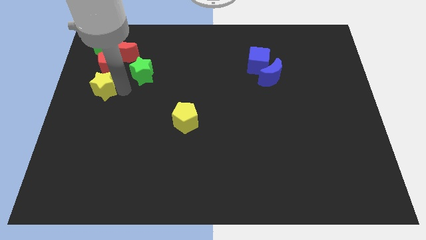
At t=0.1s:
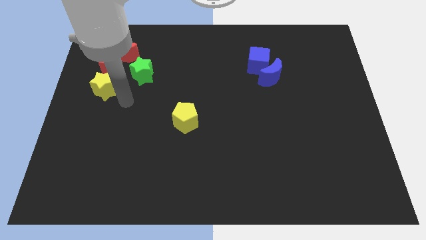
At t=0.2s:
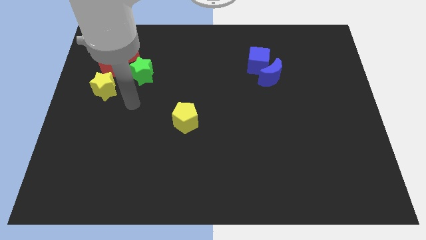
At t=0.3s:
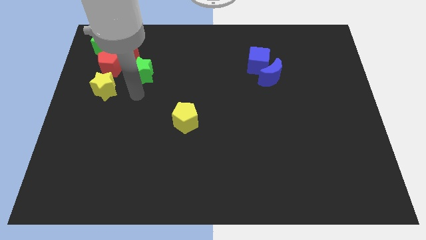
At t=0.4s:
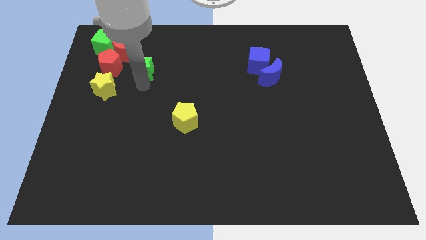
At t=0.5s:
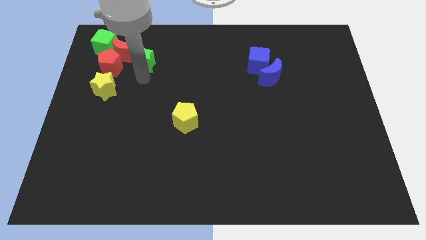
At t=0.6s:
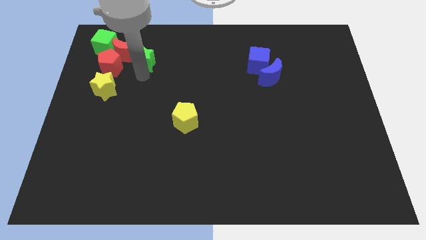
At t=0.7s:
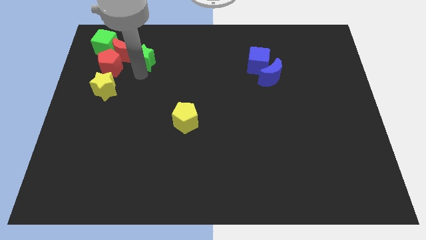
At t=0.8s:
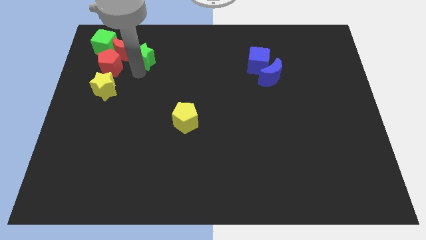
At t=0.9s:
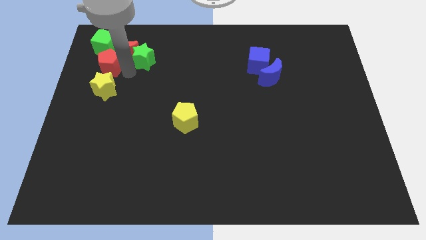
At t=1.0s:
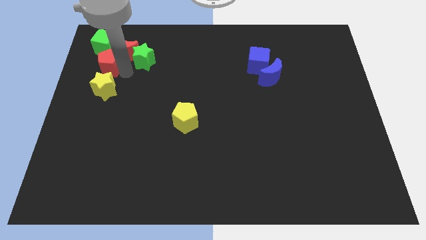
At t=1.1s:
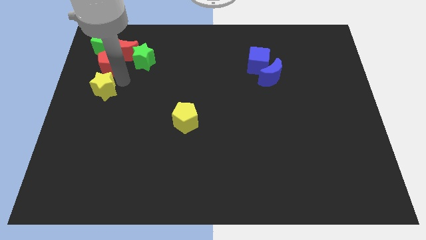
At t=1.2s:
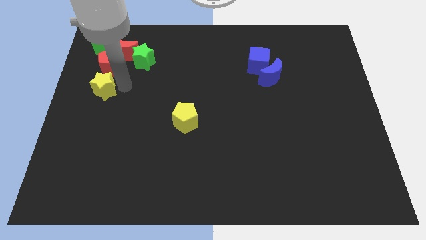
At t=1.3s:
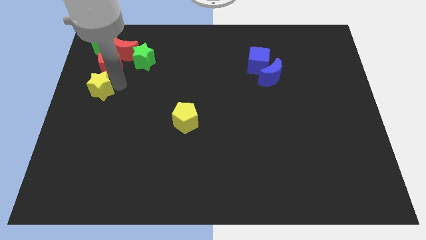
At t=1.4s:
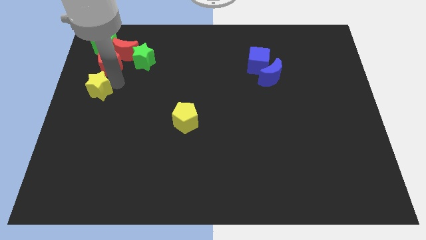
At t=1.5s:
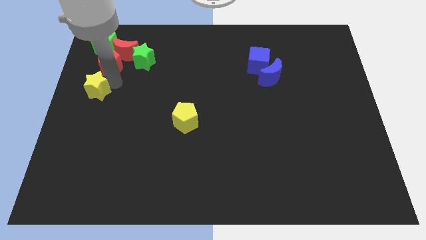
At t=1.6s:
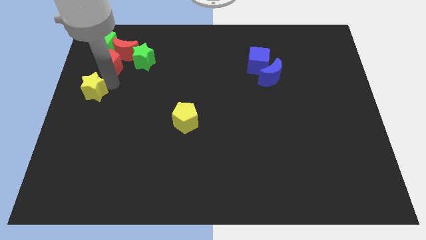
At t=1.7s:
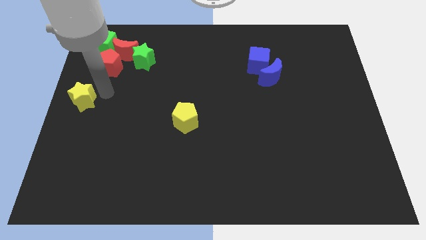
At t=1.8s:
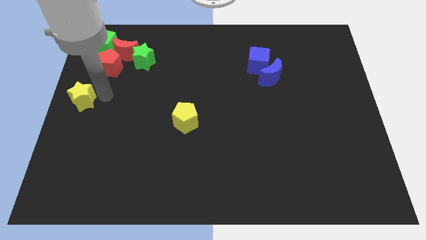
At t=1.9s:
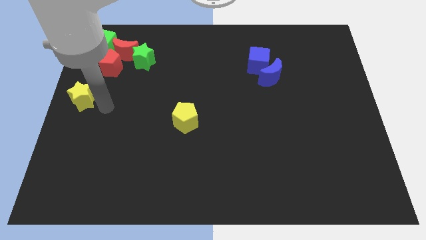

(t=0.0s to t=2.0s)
slide the yellow star towards center left side

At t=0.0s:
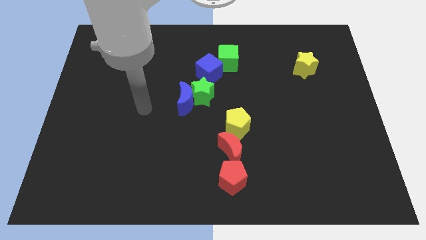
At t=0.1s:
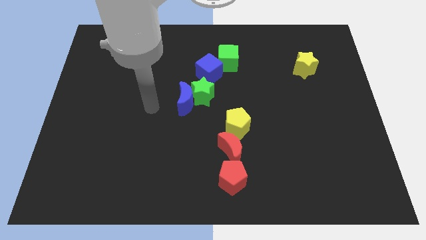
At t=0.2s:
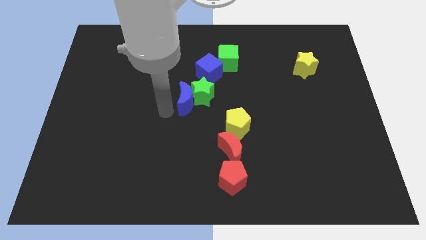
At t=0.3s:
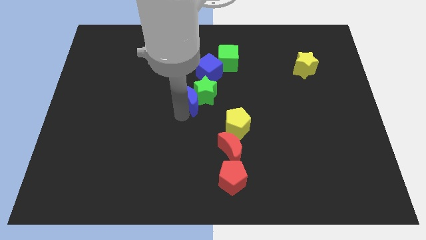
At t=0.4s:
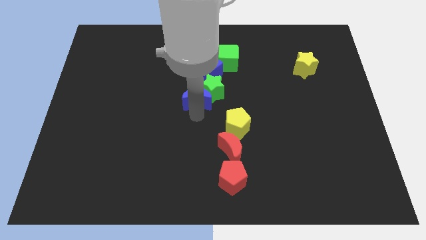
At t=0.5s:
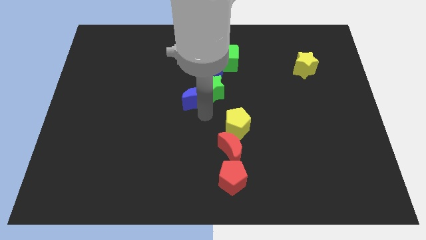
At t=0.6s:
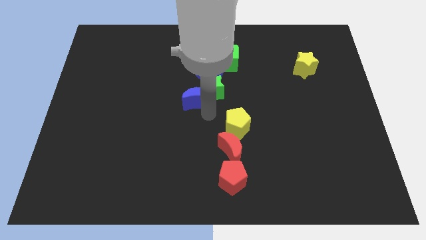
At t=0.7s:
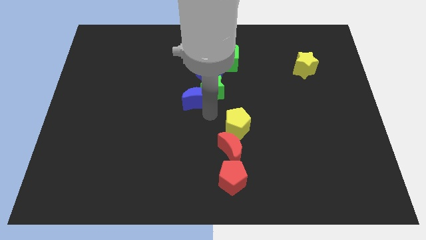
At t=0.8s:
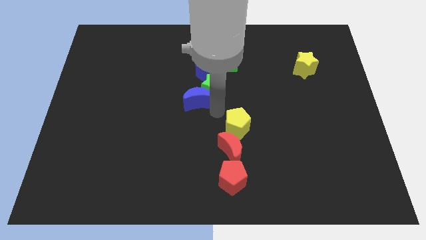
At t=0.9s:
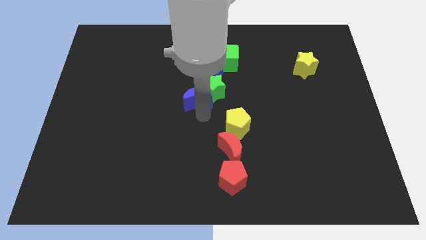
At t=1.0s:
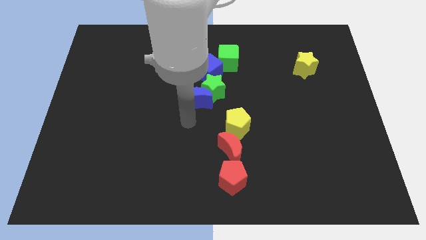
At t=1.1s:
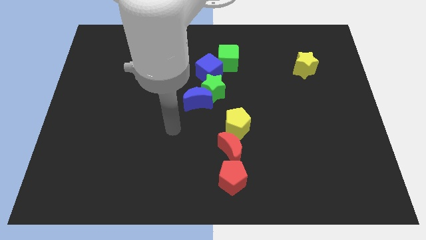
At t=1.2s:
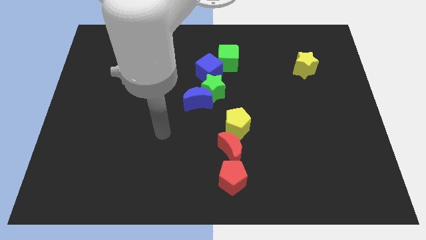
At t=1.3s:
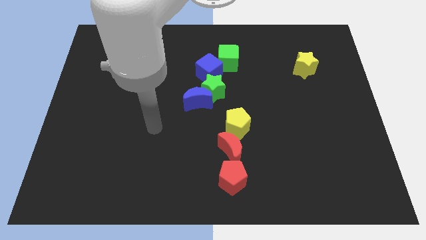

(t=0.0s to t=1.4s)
push green star and the blue moon into the blue cube

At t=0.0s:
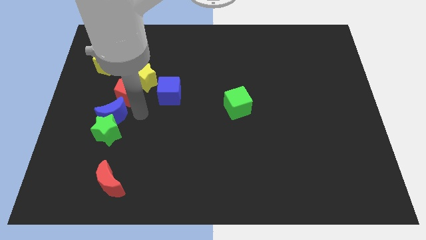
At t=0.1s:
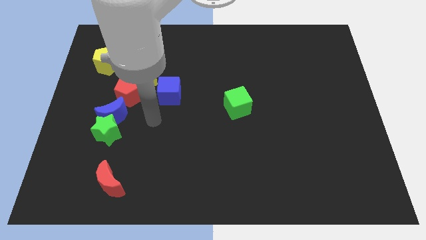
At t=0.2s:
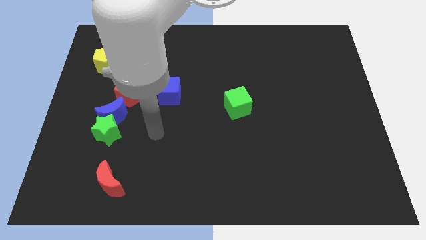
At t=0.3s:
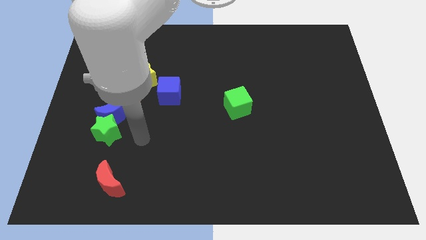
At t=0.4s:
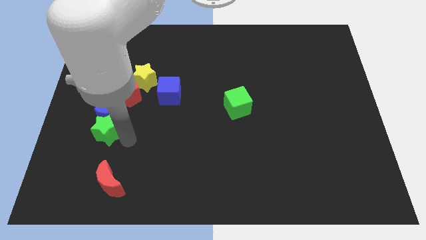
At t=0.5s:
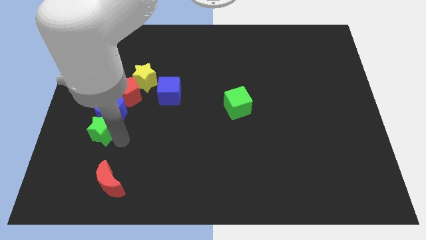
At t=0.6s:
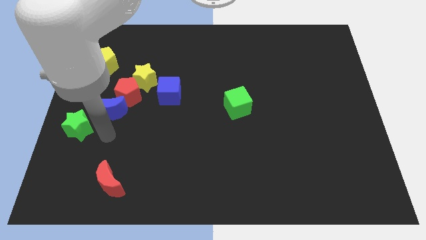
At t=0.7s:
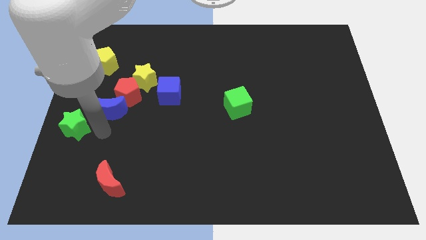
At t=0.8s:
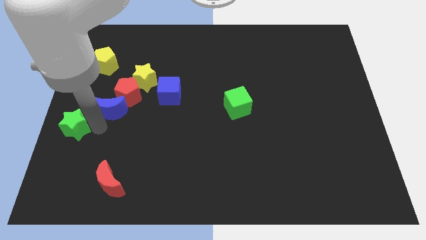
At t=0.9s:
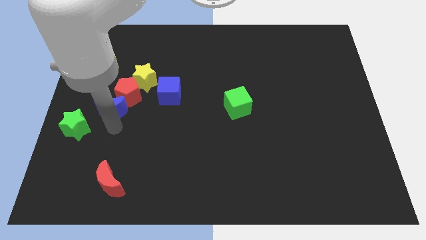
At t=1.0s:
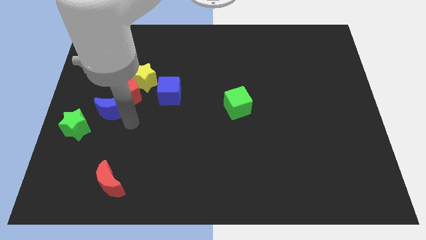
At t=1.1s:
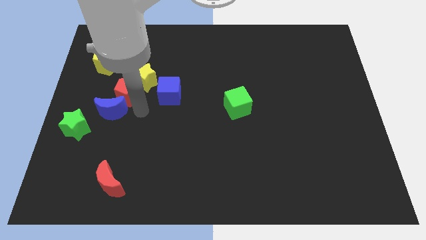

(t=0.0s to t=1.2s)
push the green star to the left of the board

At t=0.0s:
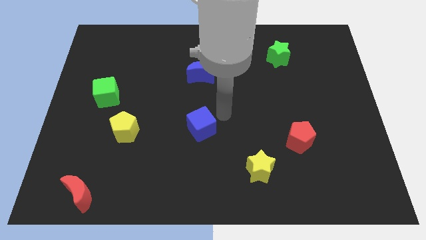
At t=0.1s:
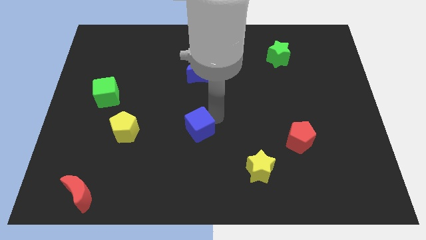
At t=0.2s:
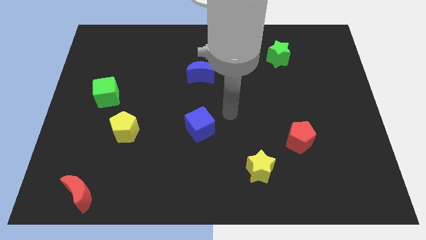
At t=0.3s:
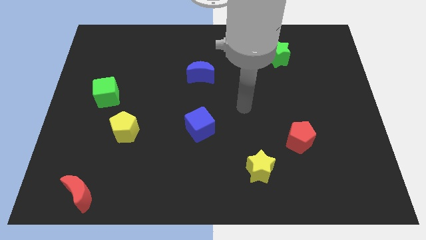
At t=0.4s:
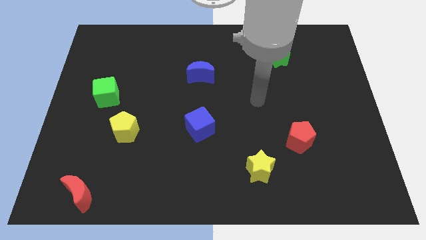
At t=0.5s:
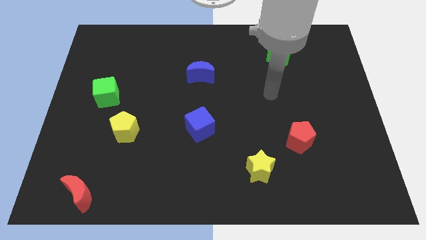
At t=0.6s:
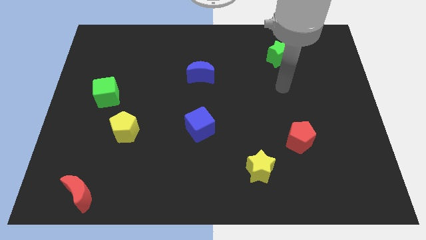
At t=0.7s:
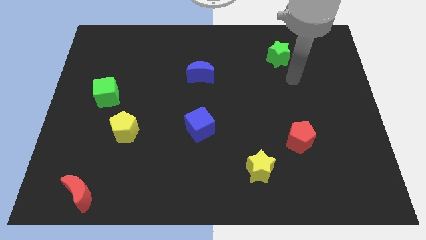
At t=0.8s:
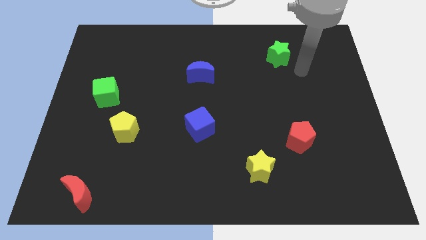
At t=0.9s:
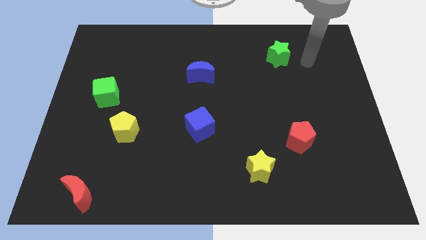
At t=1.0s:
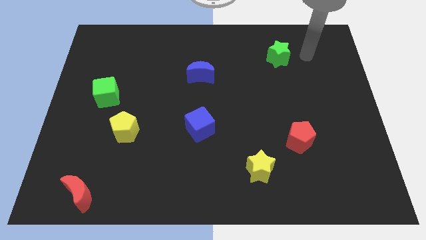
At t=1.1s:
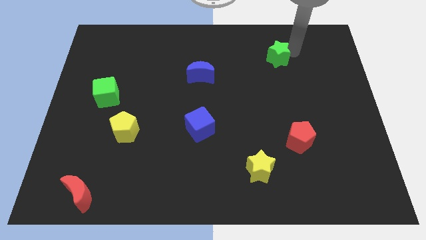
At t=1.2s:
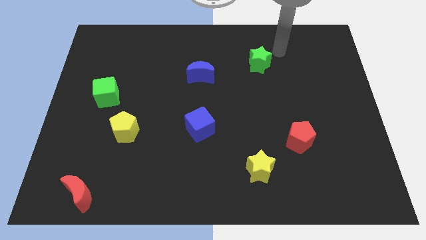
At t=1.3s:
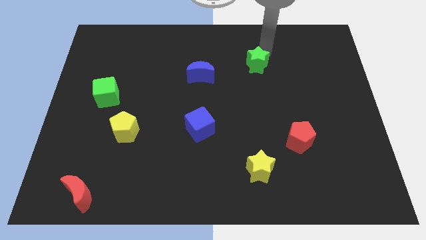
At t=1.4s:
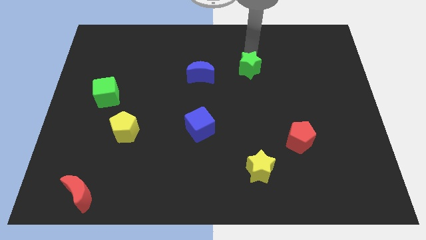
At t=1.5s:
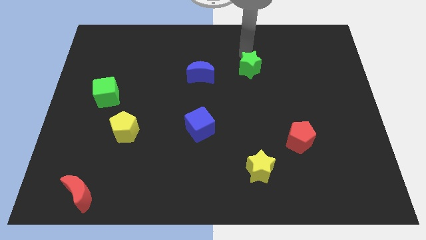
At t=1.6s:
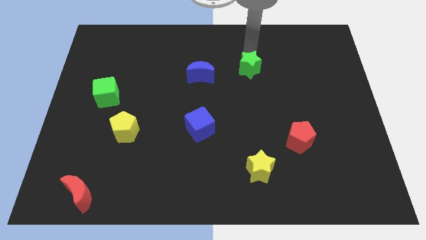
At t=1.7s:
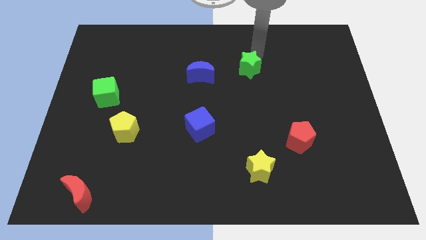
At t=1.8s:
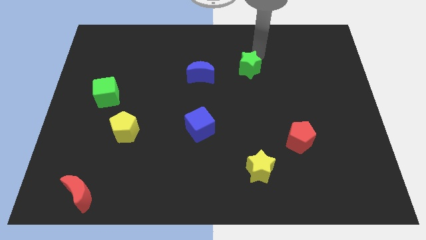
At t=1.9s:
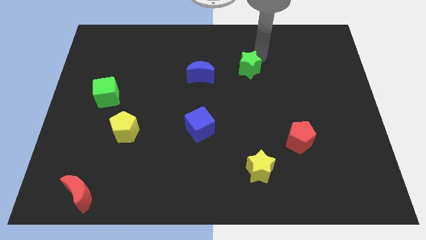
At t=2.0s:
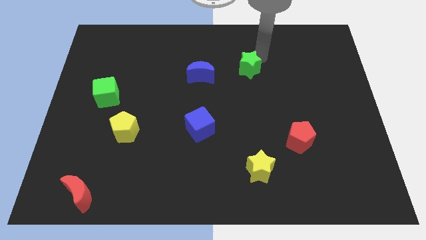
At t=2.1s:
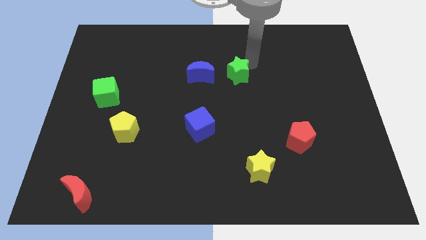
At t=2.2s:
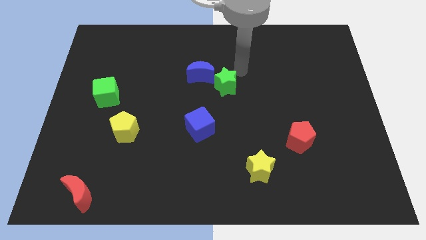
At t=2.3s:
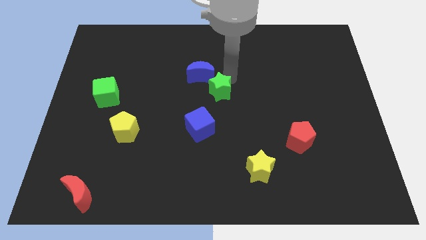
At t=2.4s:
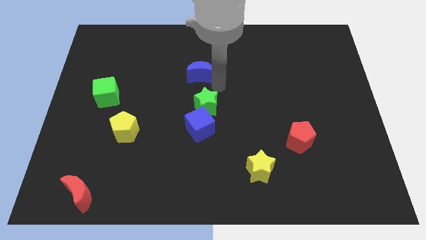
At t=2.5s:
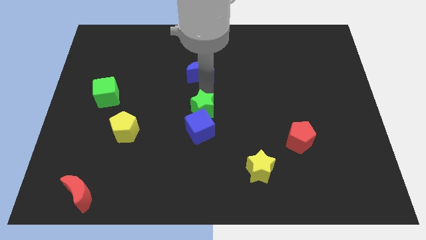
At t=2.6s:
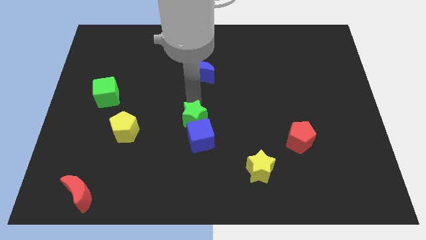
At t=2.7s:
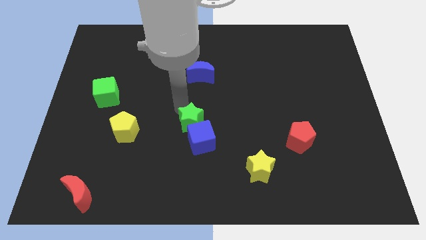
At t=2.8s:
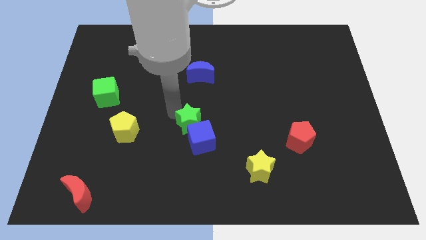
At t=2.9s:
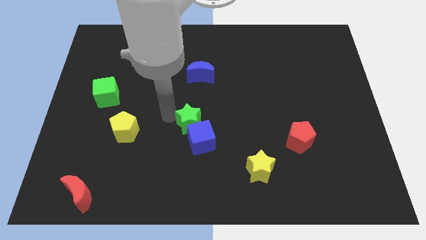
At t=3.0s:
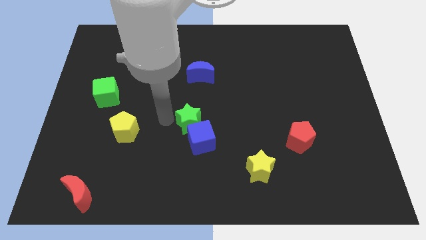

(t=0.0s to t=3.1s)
slide the green star into the blue cube

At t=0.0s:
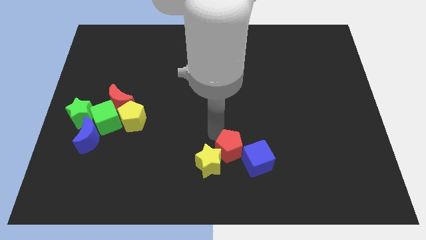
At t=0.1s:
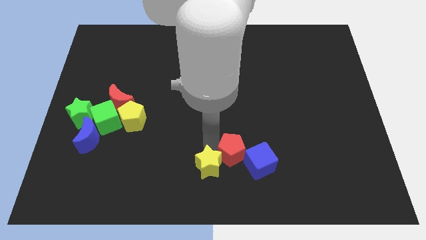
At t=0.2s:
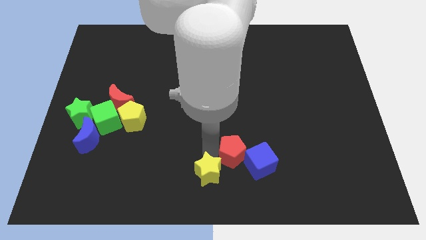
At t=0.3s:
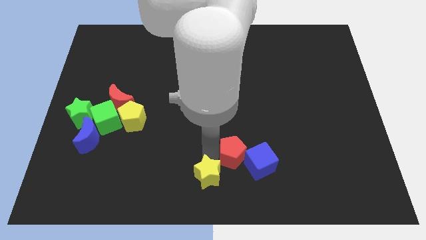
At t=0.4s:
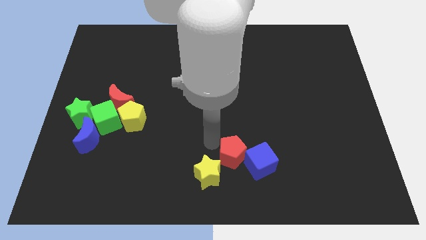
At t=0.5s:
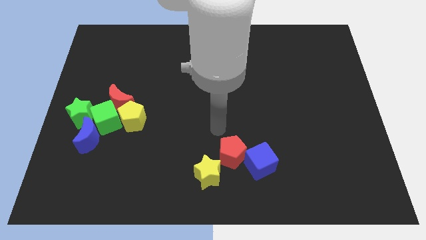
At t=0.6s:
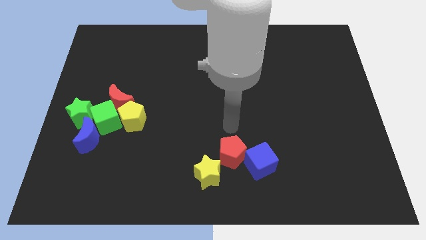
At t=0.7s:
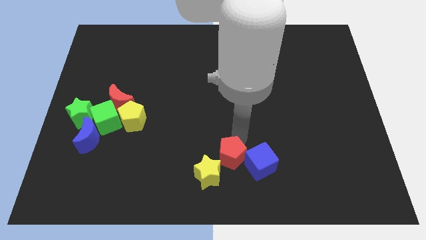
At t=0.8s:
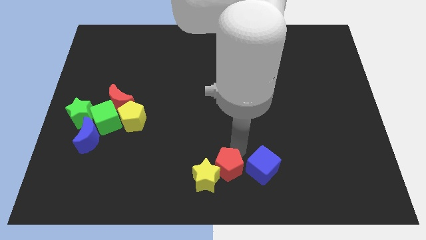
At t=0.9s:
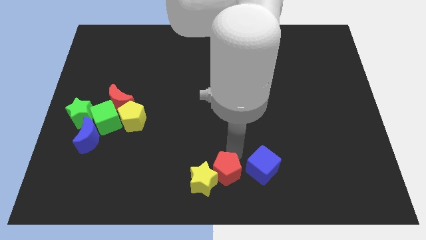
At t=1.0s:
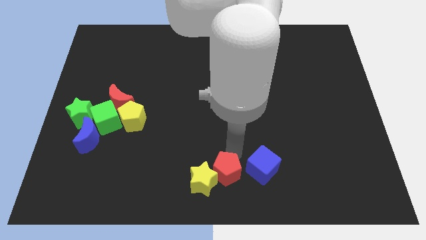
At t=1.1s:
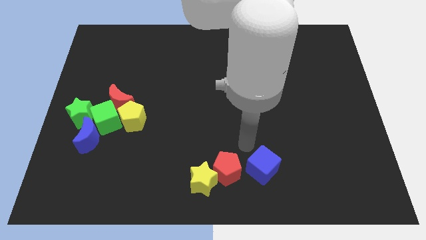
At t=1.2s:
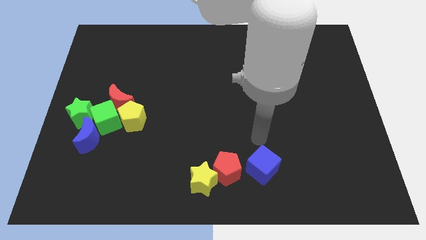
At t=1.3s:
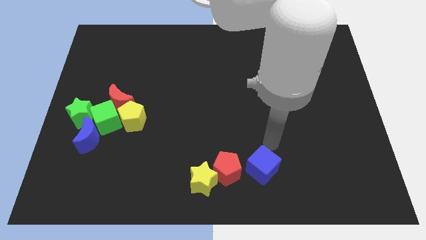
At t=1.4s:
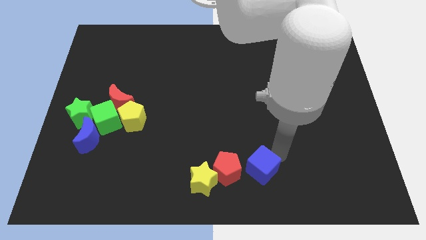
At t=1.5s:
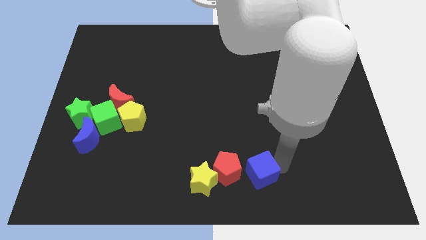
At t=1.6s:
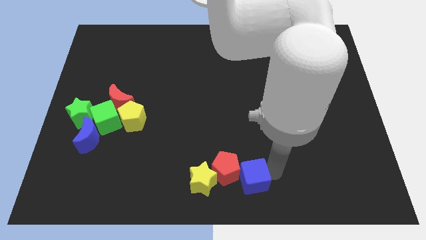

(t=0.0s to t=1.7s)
push the red pentagon into the yellow star
